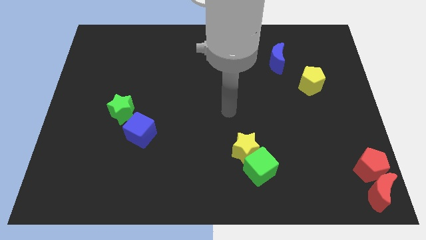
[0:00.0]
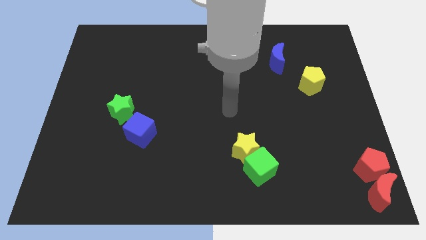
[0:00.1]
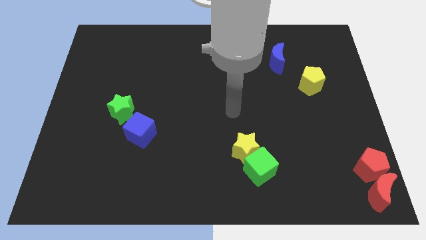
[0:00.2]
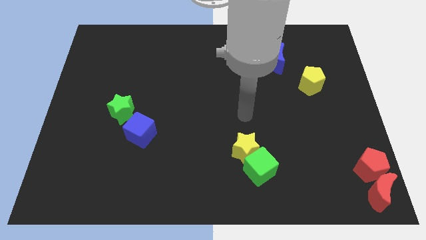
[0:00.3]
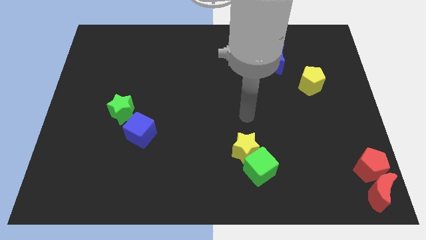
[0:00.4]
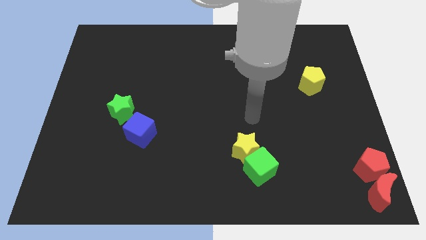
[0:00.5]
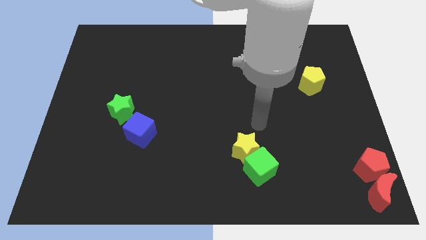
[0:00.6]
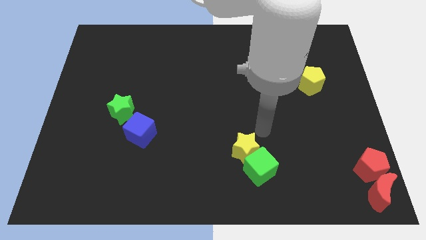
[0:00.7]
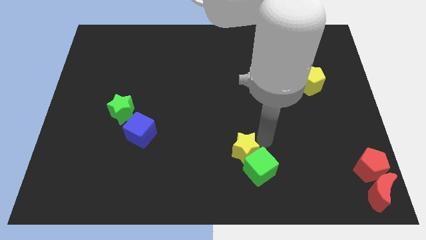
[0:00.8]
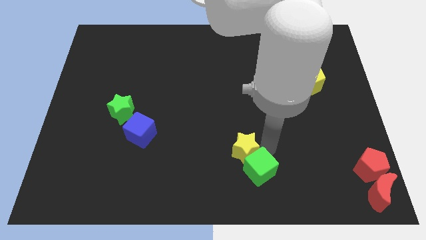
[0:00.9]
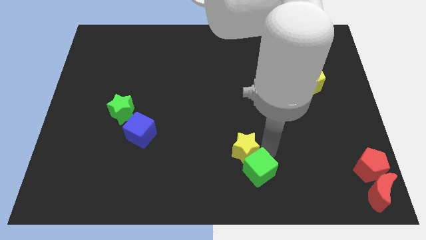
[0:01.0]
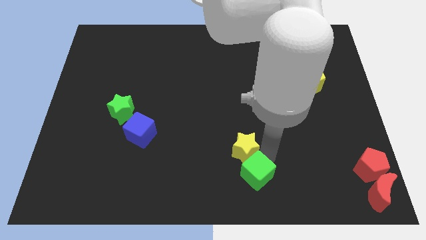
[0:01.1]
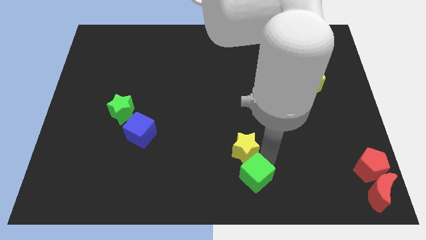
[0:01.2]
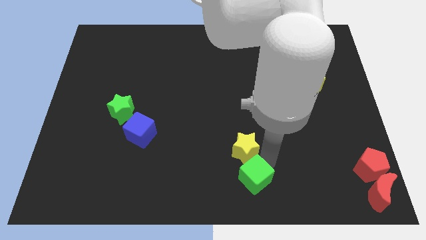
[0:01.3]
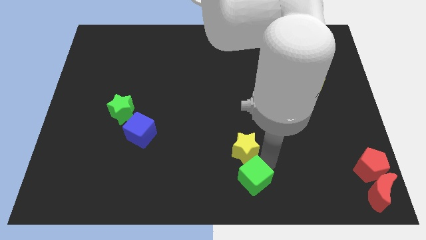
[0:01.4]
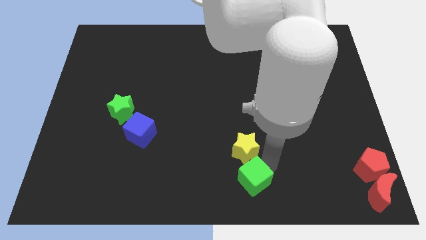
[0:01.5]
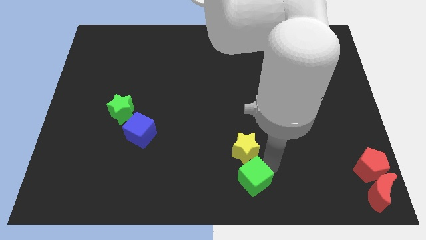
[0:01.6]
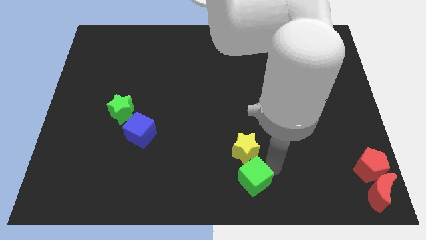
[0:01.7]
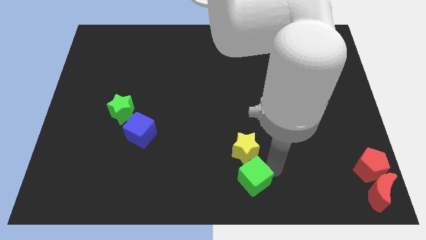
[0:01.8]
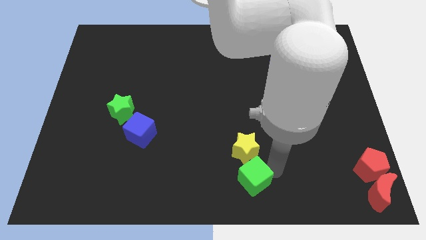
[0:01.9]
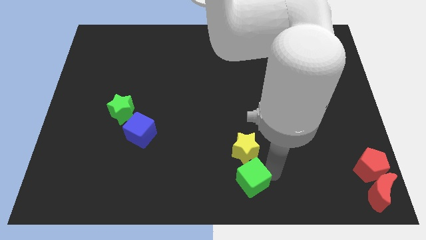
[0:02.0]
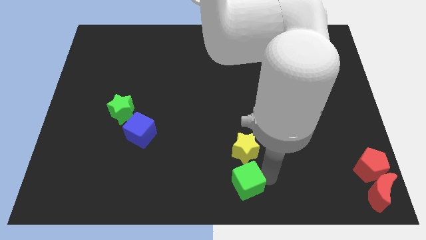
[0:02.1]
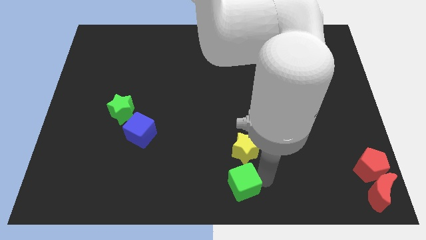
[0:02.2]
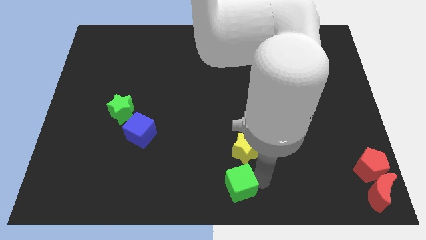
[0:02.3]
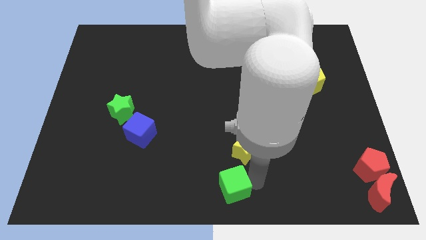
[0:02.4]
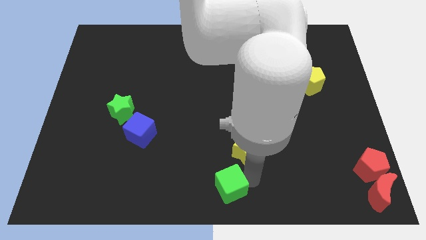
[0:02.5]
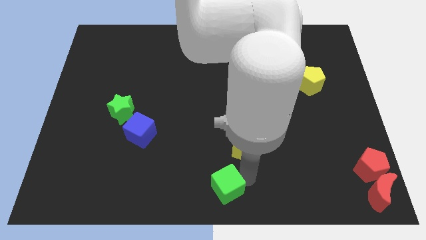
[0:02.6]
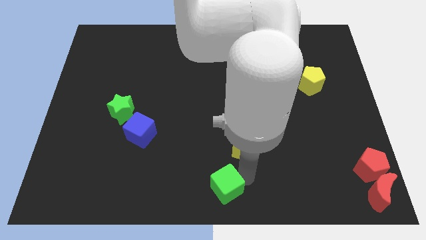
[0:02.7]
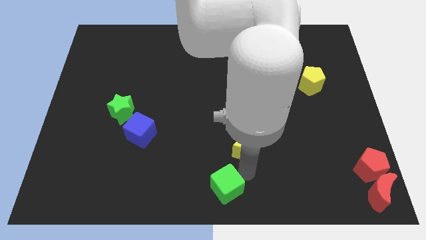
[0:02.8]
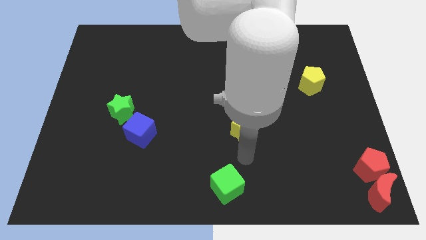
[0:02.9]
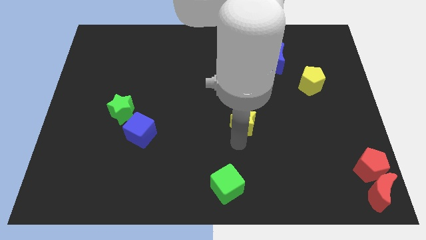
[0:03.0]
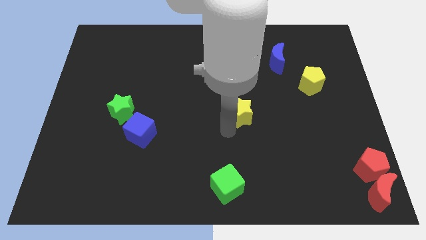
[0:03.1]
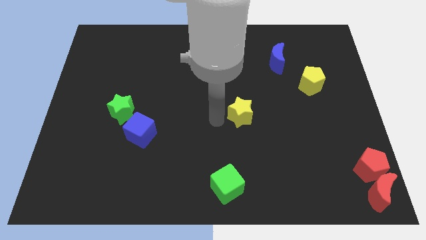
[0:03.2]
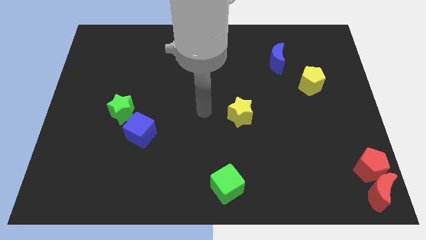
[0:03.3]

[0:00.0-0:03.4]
push yellow star slightly towards upwards

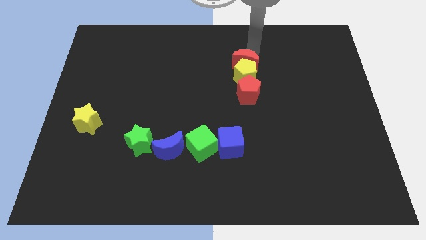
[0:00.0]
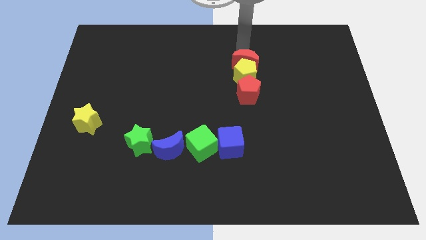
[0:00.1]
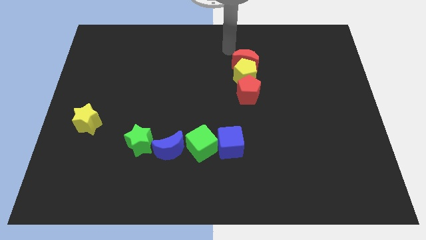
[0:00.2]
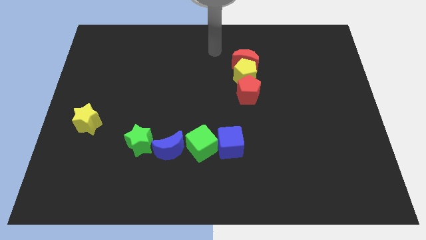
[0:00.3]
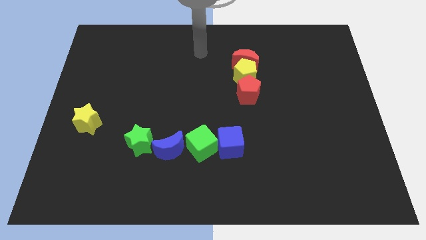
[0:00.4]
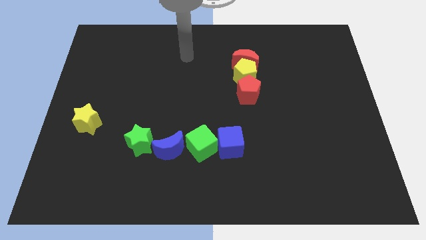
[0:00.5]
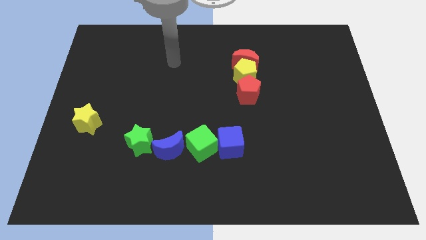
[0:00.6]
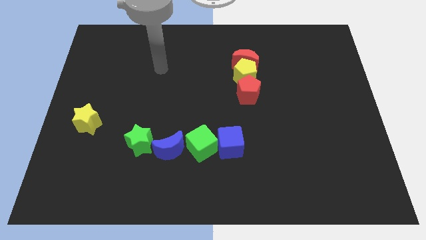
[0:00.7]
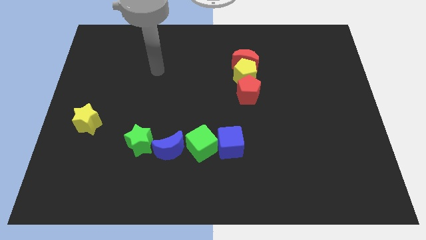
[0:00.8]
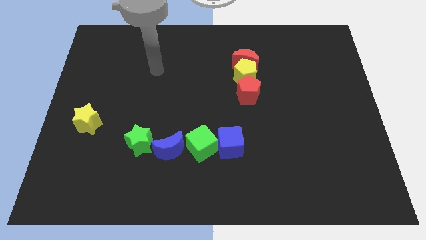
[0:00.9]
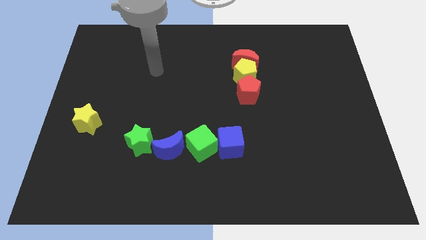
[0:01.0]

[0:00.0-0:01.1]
move your arm away from red crescent

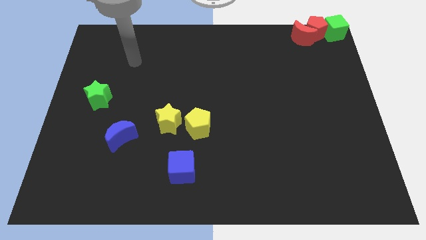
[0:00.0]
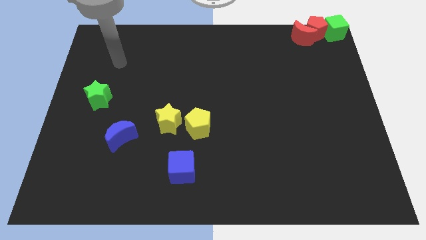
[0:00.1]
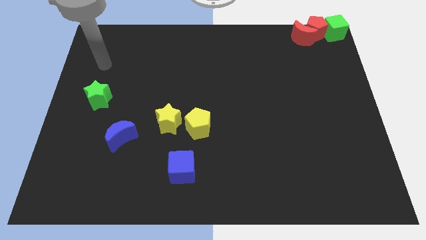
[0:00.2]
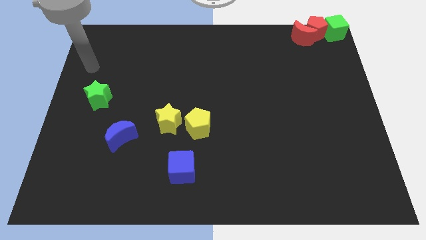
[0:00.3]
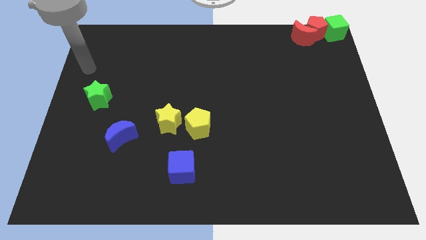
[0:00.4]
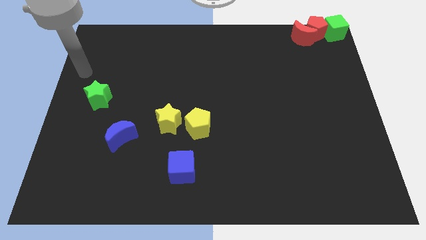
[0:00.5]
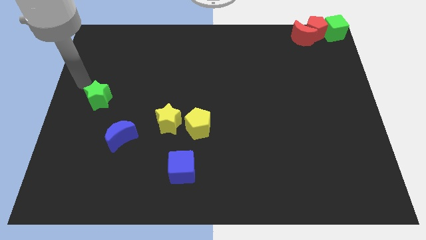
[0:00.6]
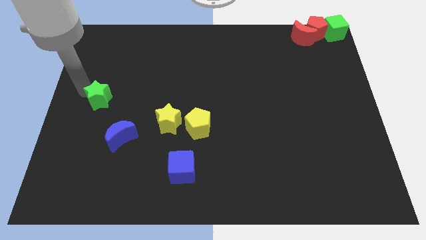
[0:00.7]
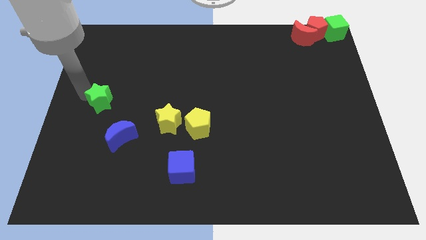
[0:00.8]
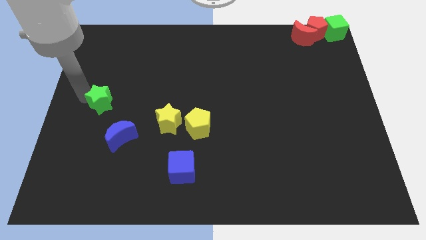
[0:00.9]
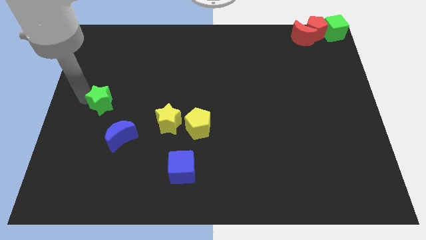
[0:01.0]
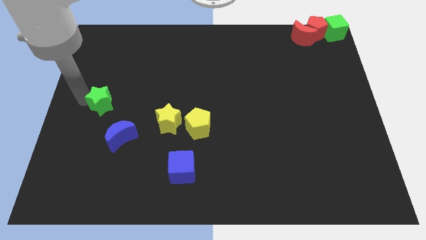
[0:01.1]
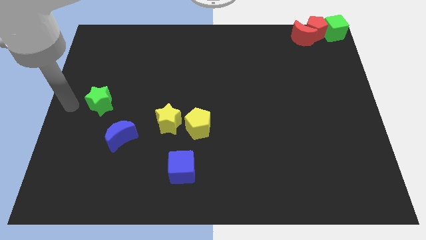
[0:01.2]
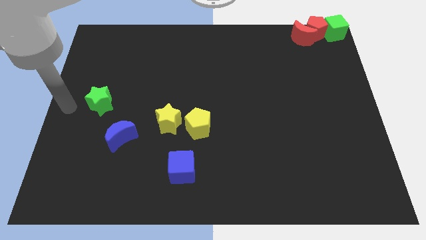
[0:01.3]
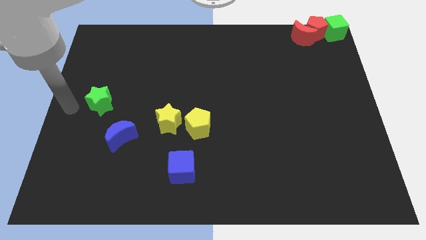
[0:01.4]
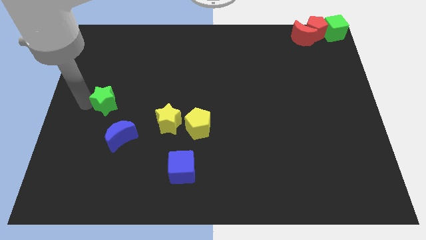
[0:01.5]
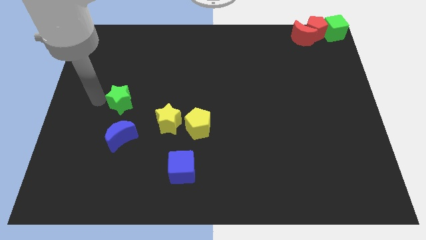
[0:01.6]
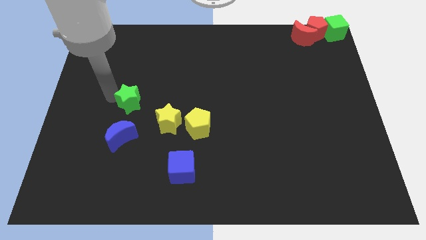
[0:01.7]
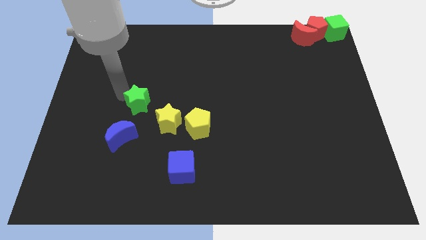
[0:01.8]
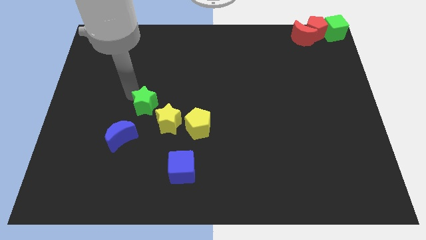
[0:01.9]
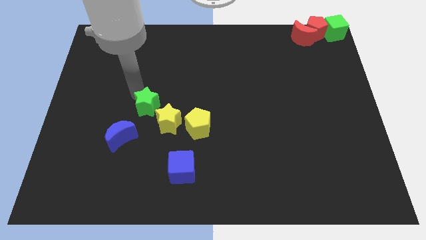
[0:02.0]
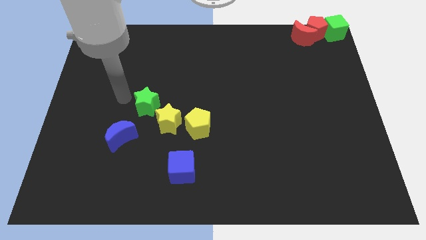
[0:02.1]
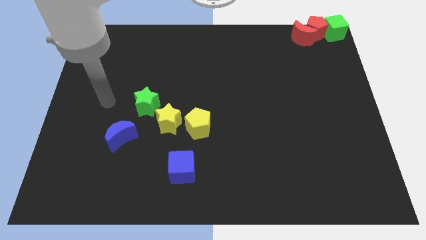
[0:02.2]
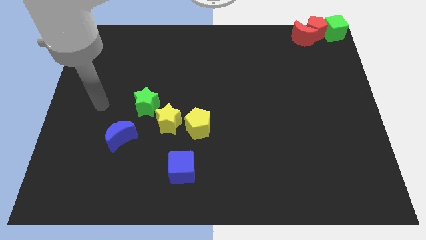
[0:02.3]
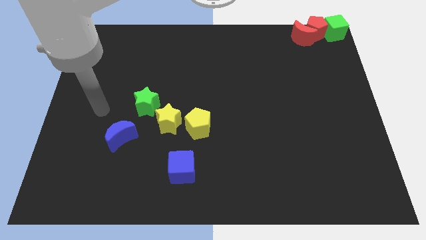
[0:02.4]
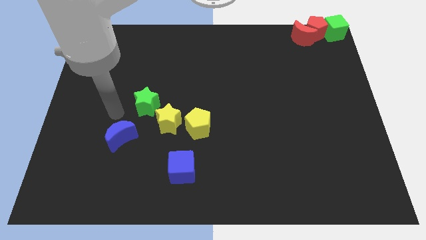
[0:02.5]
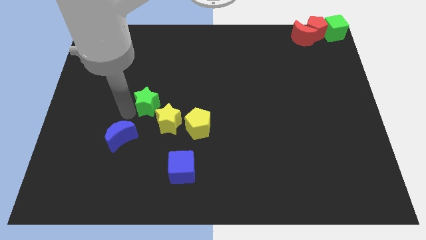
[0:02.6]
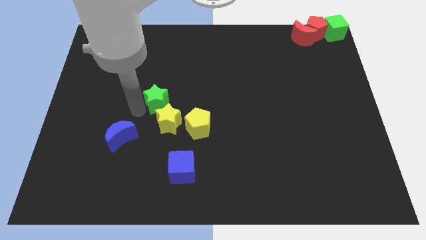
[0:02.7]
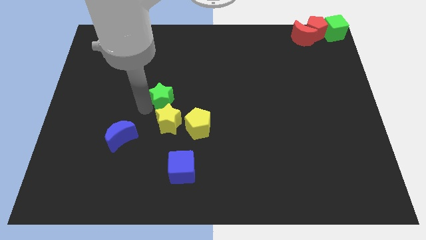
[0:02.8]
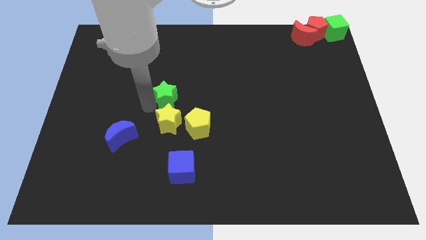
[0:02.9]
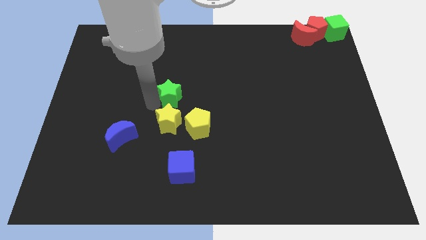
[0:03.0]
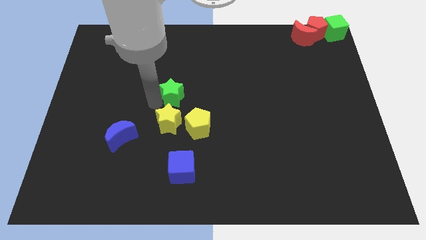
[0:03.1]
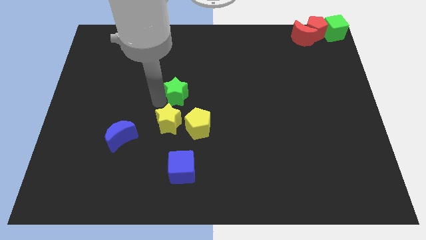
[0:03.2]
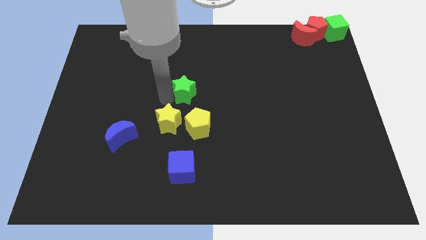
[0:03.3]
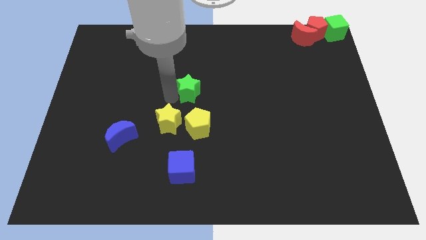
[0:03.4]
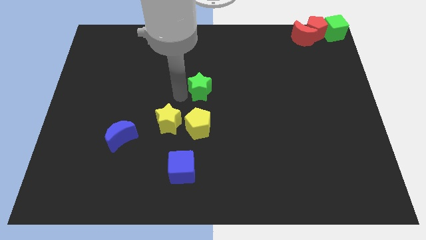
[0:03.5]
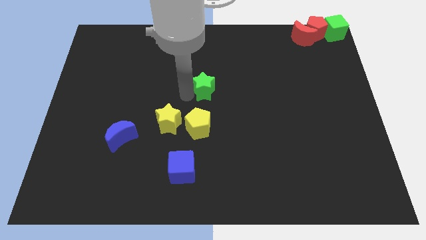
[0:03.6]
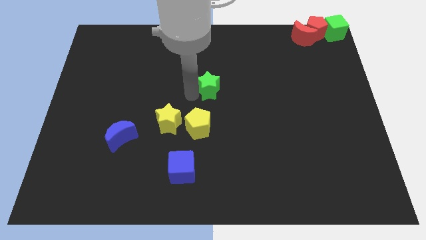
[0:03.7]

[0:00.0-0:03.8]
move green star in to the center

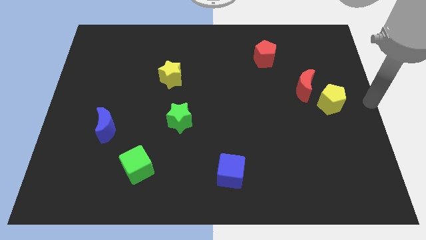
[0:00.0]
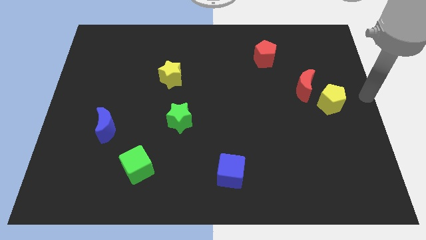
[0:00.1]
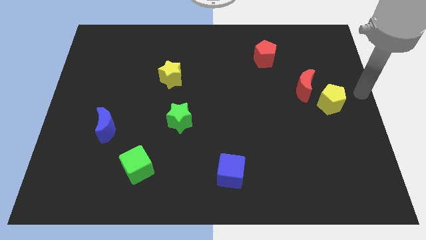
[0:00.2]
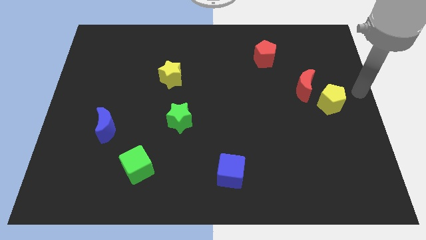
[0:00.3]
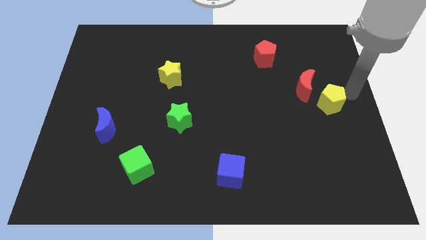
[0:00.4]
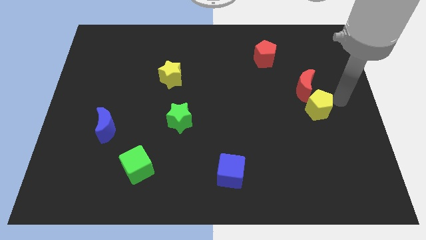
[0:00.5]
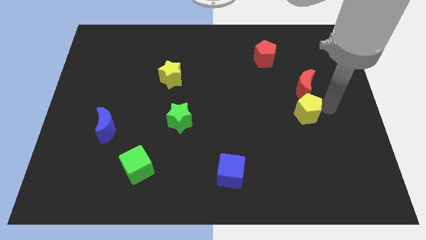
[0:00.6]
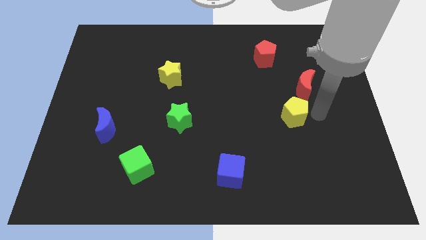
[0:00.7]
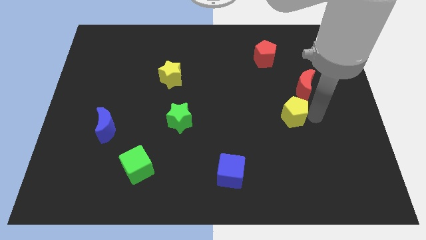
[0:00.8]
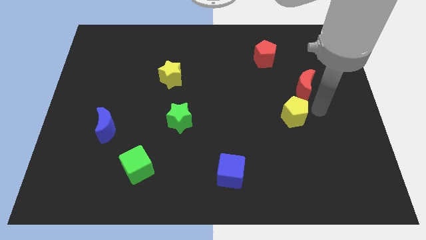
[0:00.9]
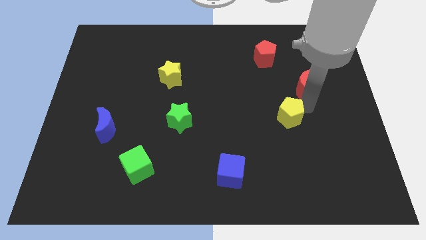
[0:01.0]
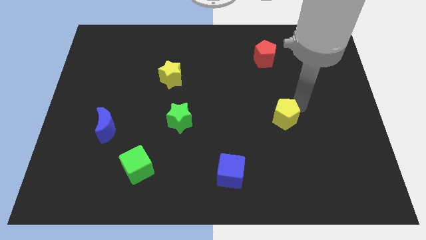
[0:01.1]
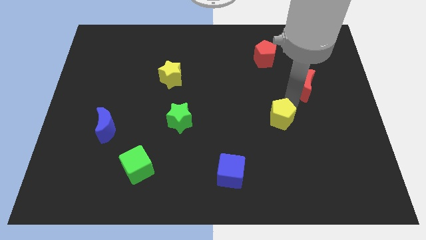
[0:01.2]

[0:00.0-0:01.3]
move the yellow pentagon to the bottom left of the red crescent
